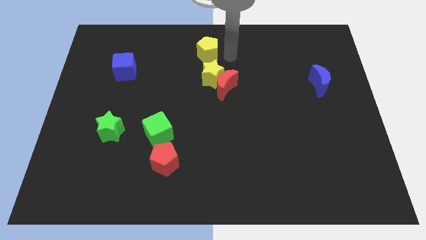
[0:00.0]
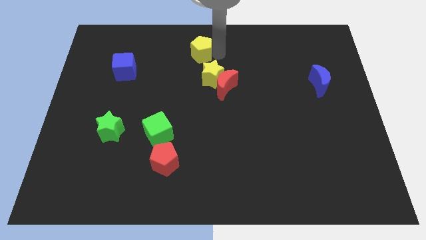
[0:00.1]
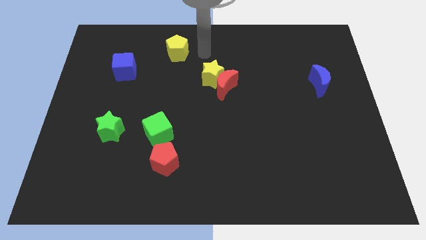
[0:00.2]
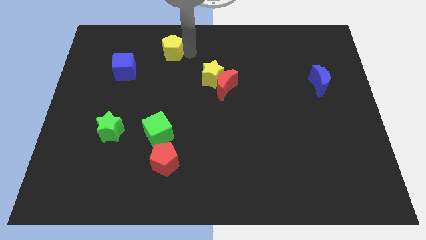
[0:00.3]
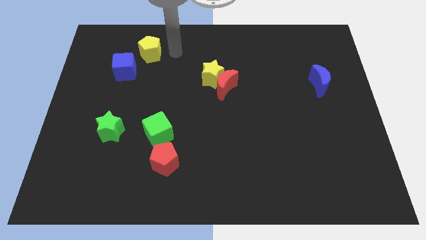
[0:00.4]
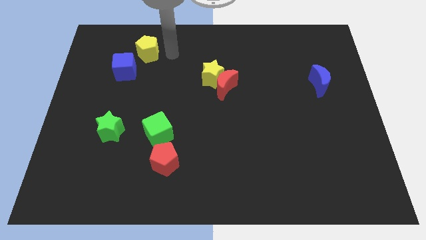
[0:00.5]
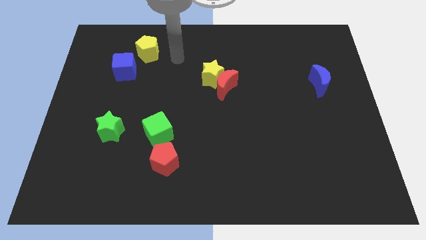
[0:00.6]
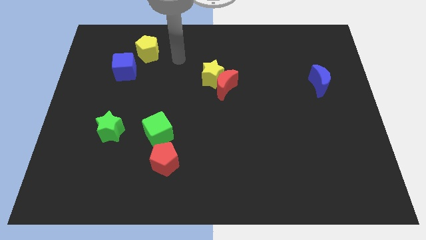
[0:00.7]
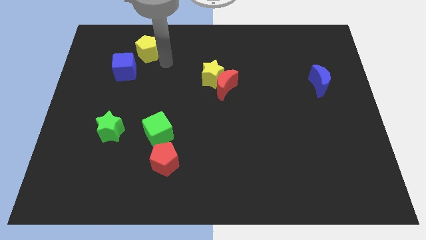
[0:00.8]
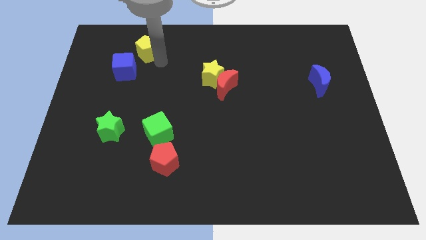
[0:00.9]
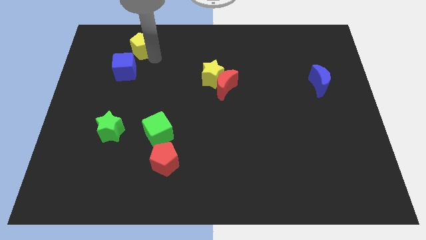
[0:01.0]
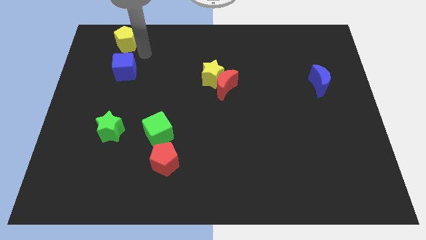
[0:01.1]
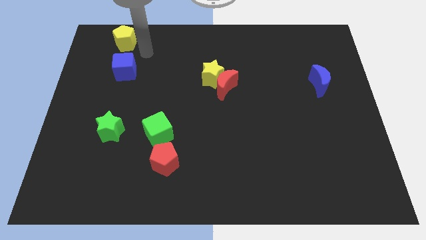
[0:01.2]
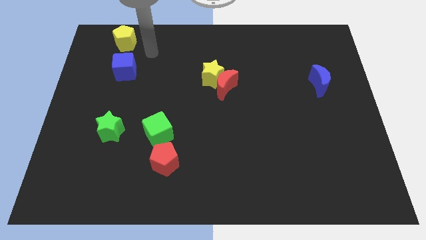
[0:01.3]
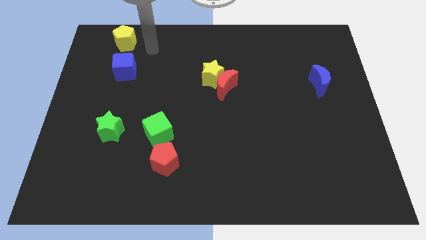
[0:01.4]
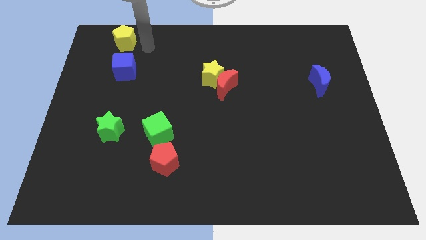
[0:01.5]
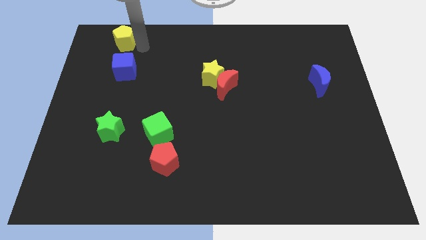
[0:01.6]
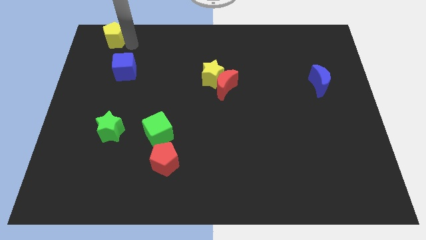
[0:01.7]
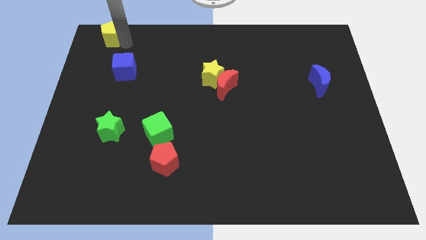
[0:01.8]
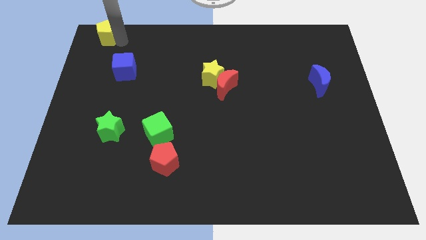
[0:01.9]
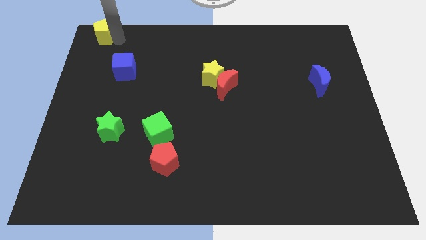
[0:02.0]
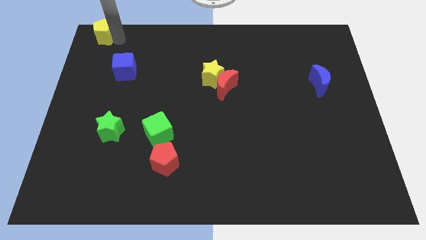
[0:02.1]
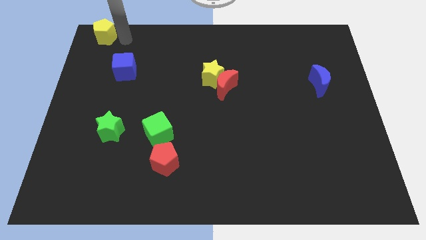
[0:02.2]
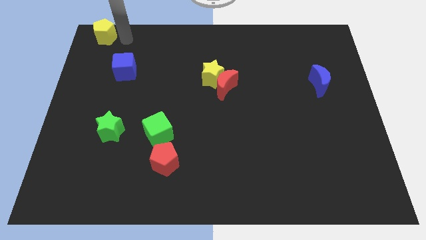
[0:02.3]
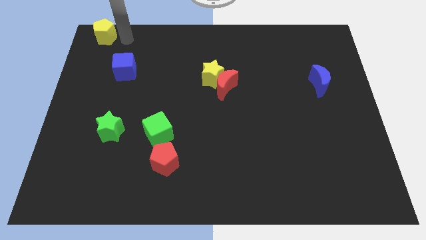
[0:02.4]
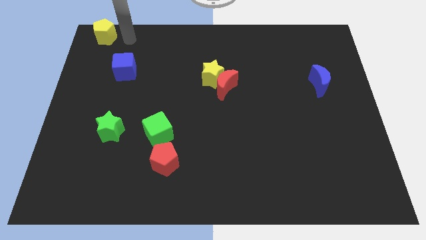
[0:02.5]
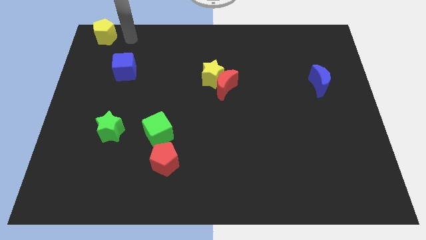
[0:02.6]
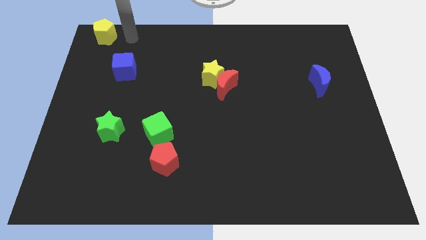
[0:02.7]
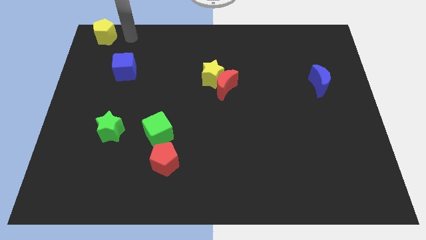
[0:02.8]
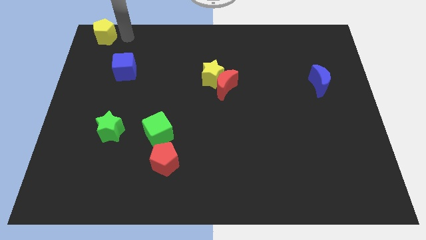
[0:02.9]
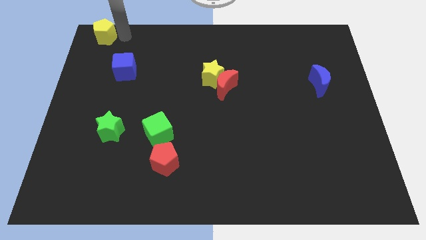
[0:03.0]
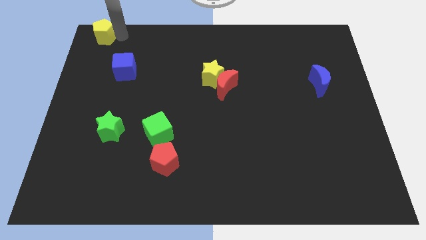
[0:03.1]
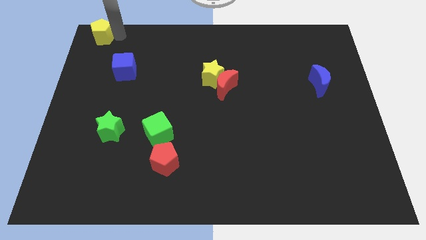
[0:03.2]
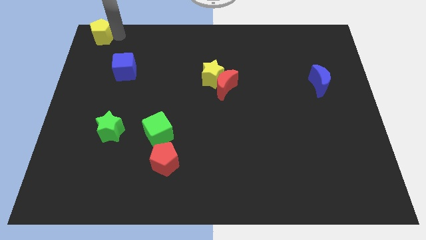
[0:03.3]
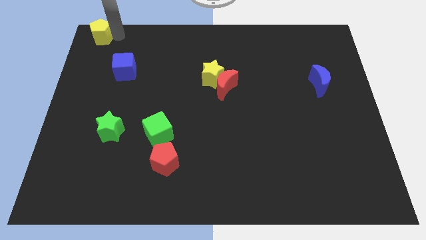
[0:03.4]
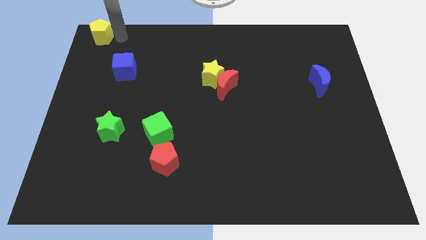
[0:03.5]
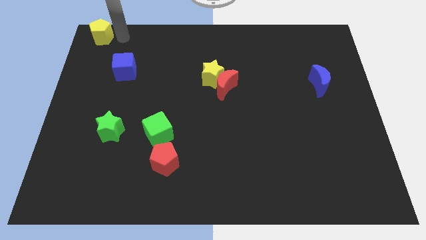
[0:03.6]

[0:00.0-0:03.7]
push the yellow pentagon to the top left corner

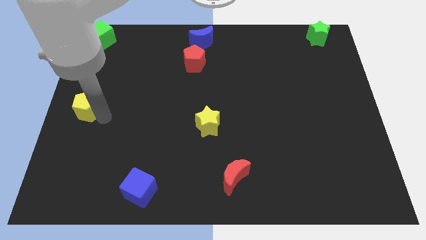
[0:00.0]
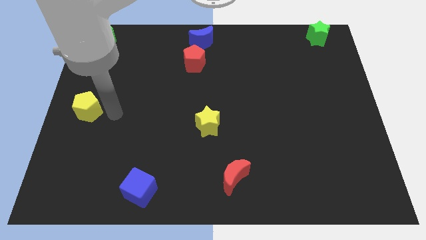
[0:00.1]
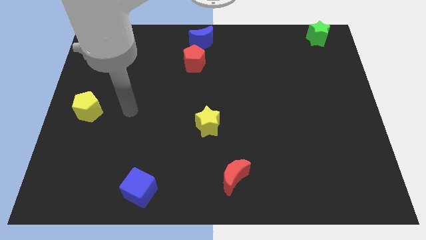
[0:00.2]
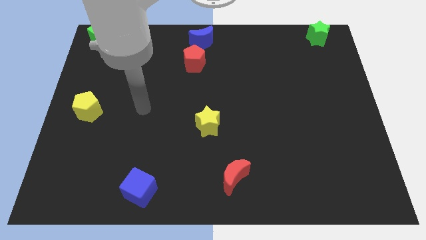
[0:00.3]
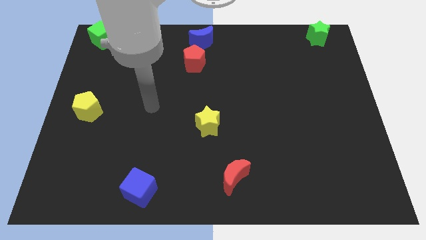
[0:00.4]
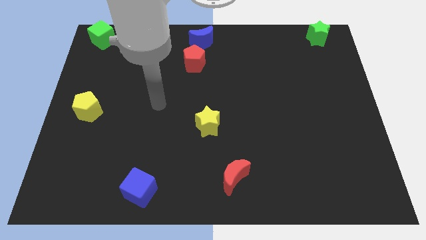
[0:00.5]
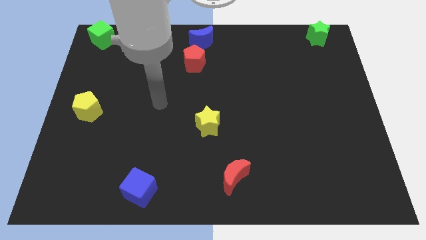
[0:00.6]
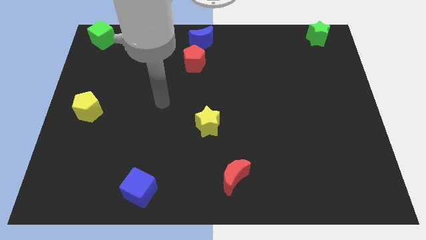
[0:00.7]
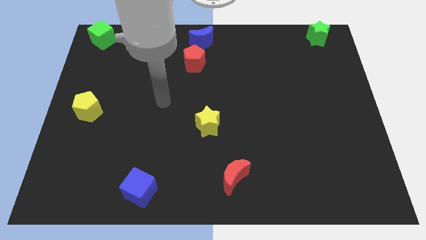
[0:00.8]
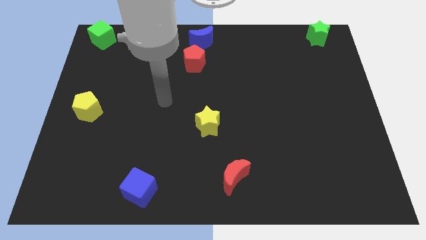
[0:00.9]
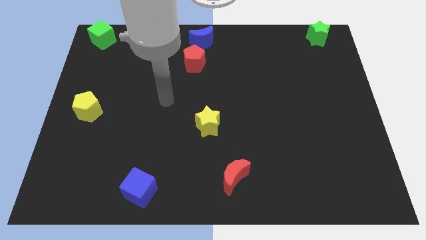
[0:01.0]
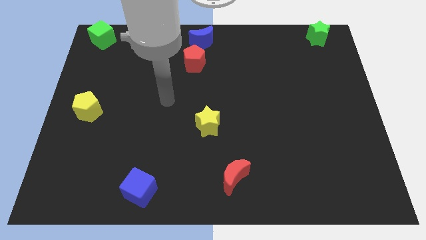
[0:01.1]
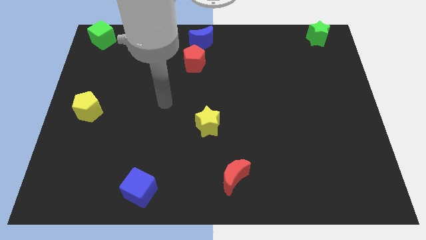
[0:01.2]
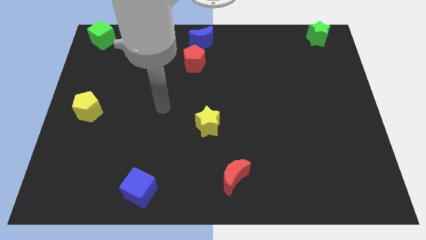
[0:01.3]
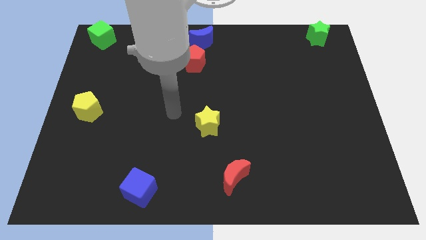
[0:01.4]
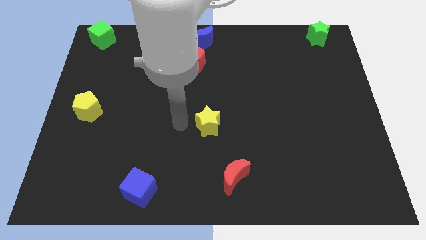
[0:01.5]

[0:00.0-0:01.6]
point your arm to the left side of yellow star

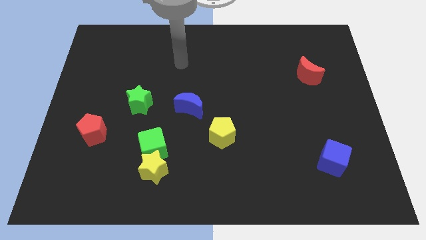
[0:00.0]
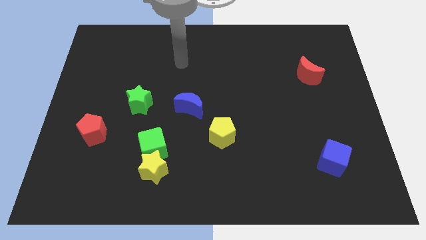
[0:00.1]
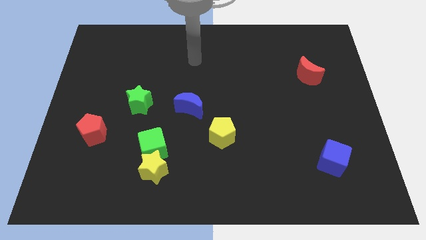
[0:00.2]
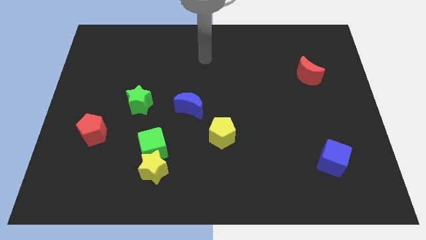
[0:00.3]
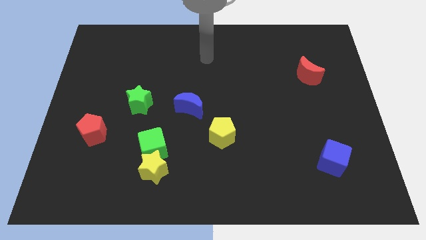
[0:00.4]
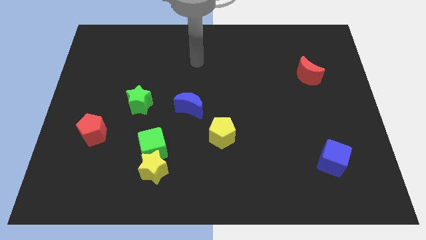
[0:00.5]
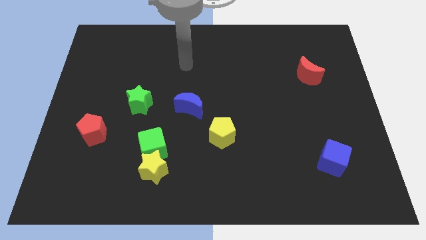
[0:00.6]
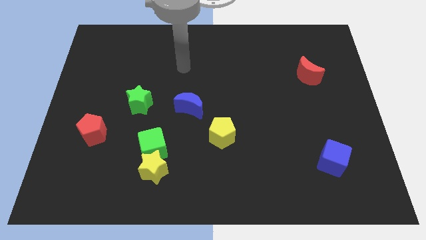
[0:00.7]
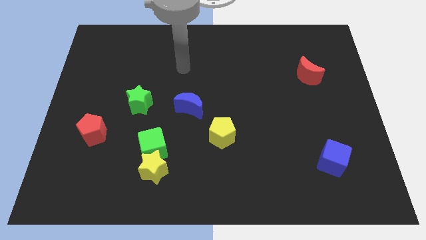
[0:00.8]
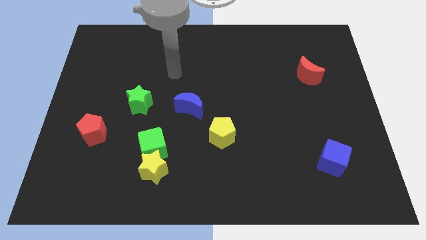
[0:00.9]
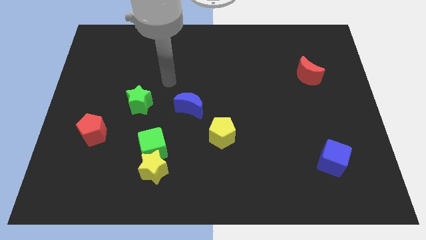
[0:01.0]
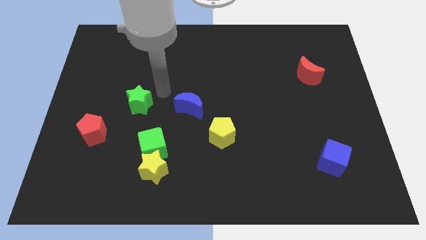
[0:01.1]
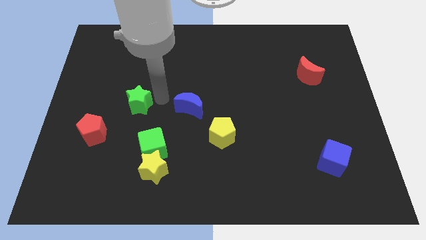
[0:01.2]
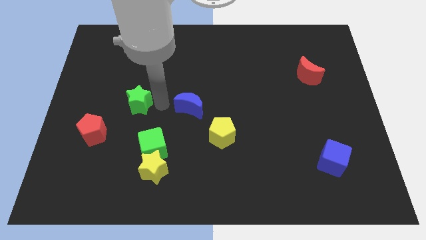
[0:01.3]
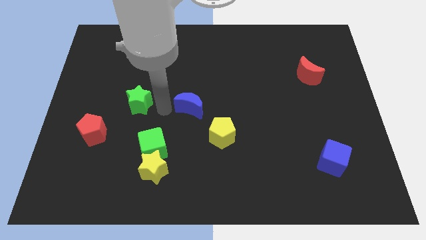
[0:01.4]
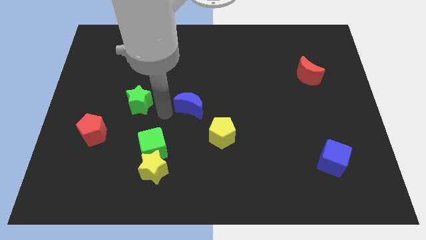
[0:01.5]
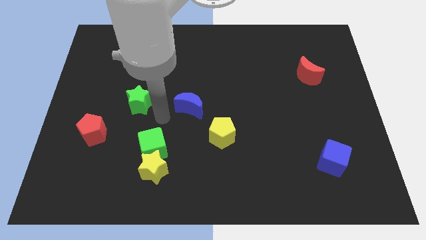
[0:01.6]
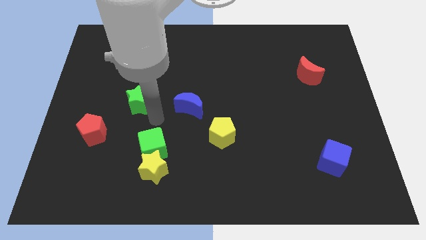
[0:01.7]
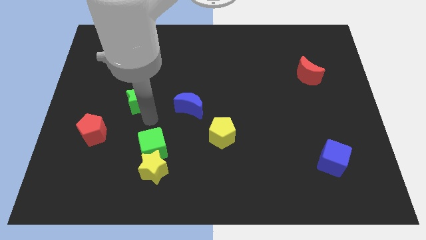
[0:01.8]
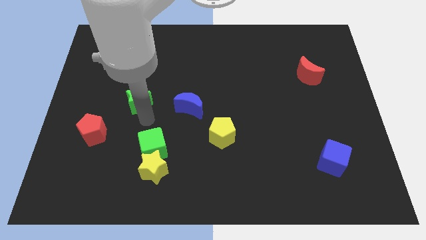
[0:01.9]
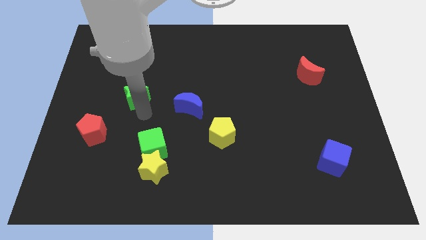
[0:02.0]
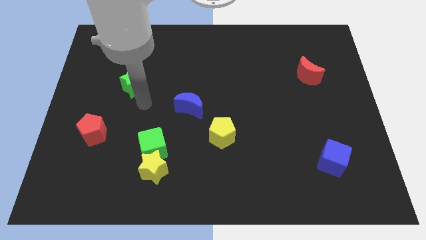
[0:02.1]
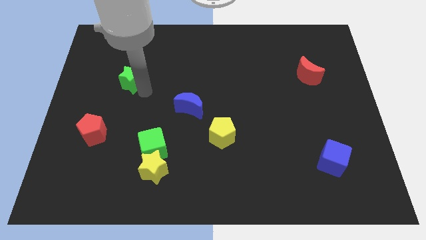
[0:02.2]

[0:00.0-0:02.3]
touch the bottom of green star

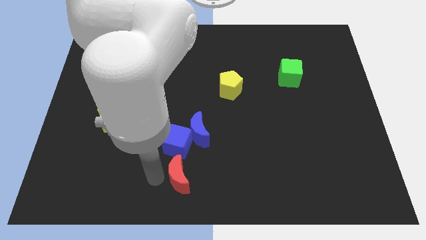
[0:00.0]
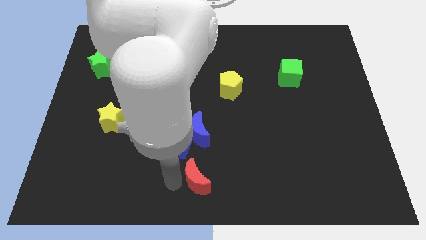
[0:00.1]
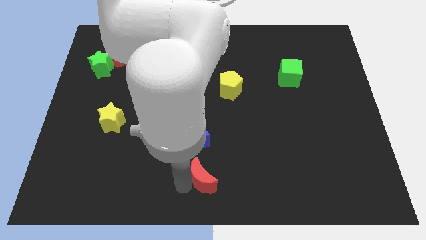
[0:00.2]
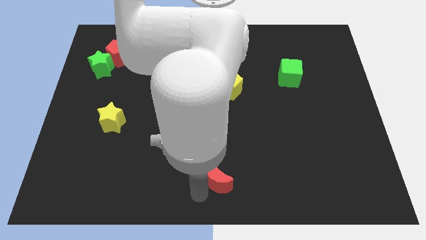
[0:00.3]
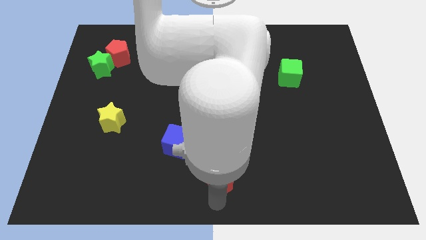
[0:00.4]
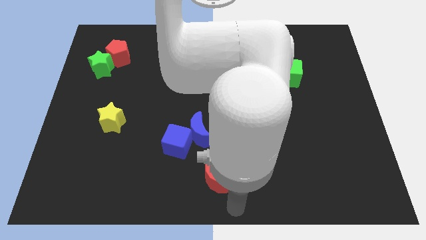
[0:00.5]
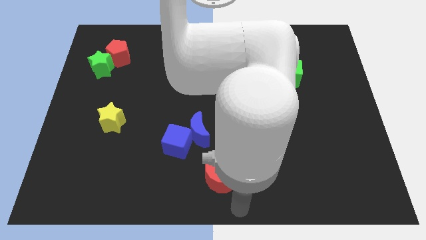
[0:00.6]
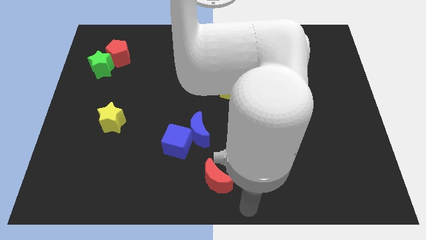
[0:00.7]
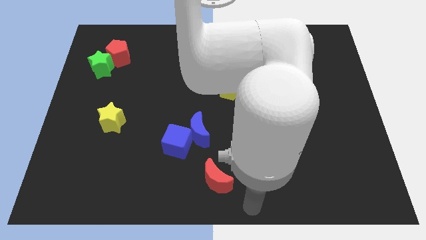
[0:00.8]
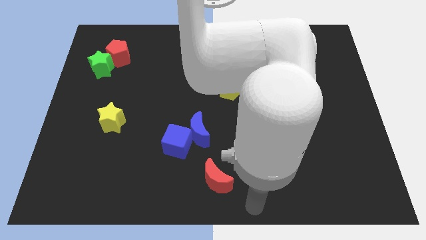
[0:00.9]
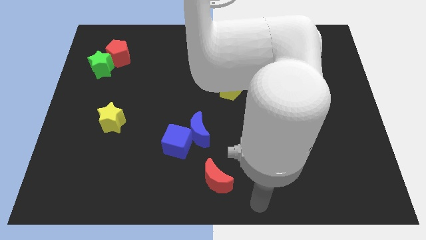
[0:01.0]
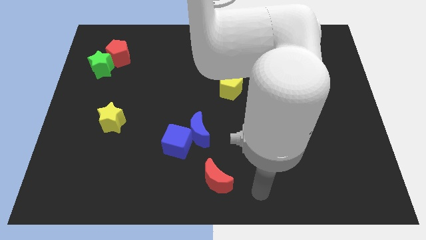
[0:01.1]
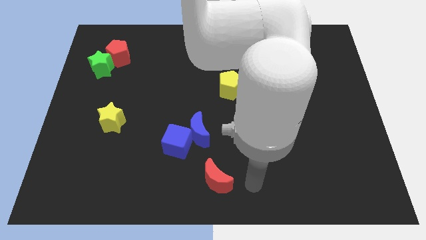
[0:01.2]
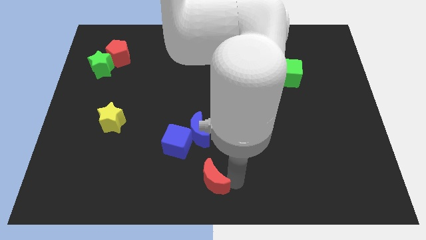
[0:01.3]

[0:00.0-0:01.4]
push the red moon towards the bottom center of the board
